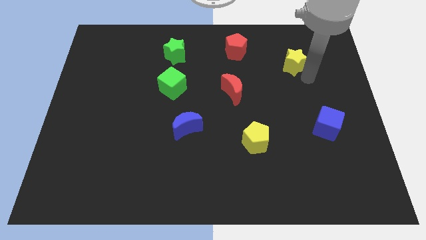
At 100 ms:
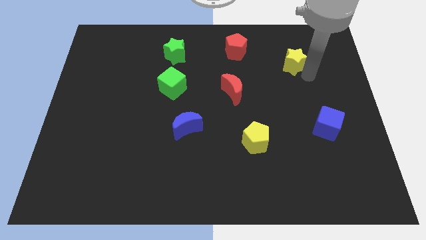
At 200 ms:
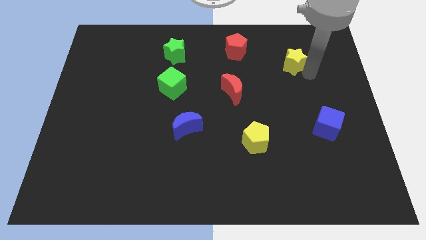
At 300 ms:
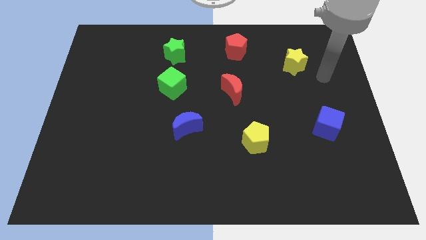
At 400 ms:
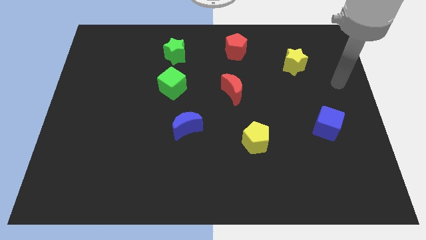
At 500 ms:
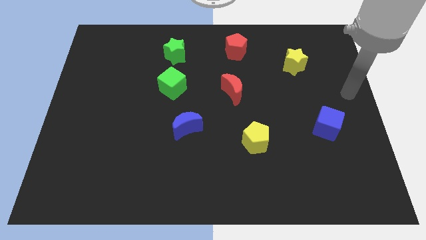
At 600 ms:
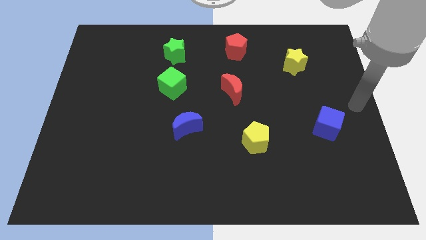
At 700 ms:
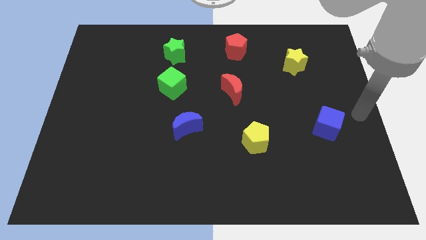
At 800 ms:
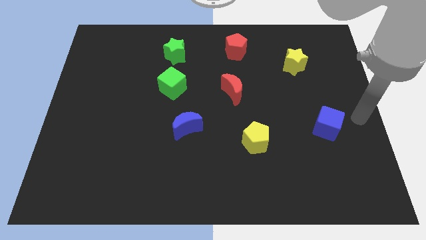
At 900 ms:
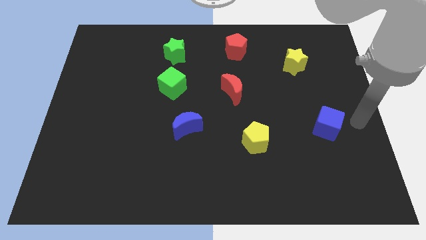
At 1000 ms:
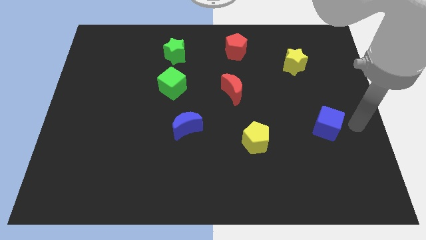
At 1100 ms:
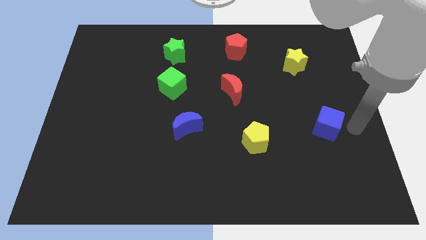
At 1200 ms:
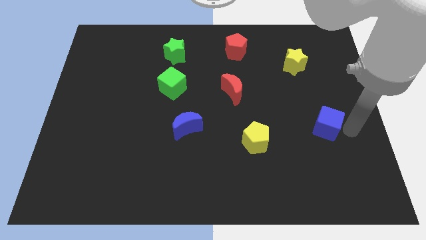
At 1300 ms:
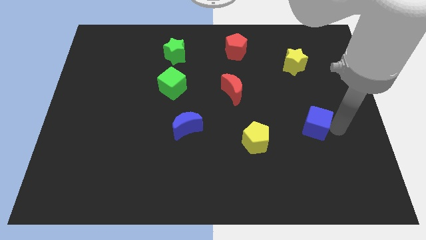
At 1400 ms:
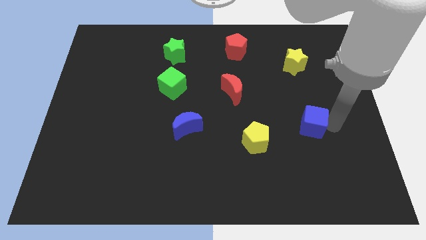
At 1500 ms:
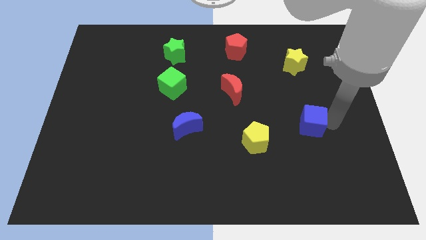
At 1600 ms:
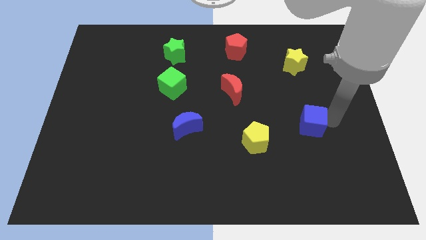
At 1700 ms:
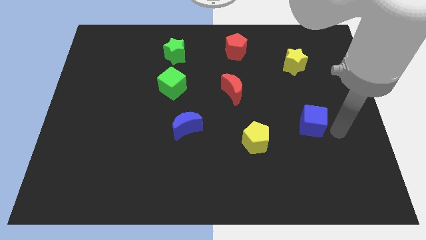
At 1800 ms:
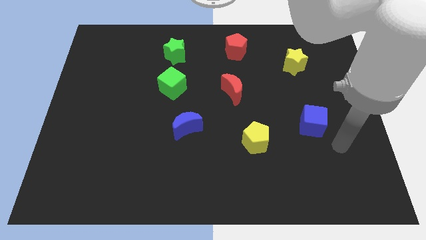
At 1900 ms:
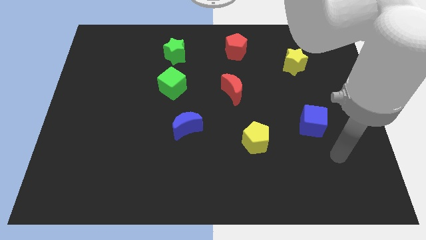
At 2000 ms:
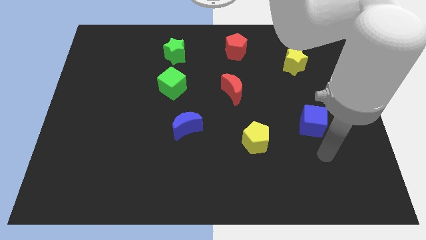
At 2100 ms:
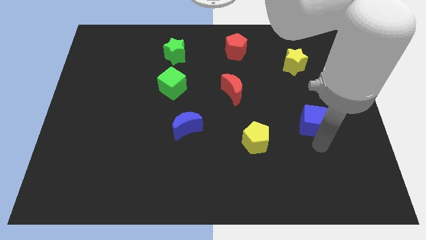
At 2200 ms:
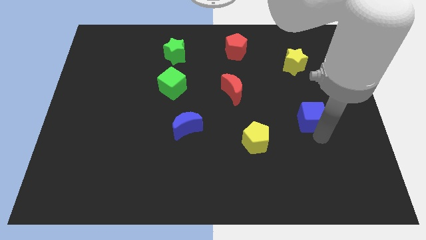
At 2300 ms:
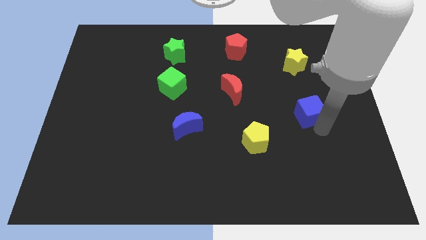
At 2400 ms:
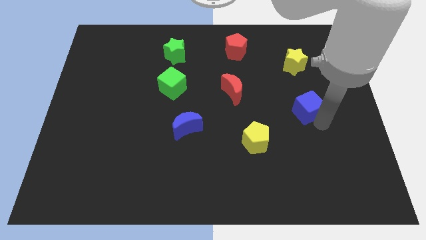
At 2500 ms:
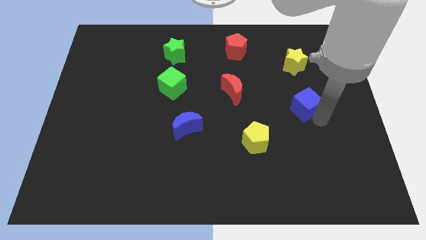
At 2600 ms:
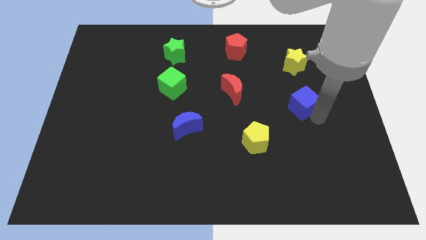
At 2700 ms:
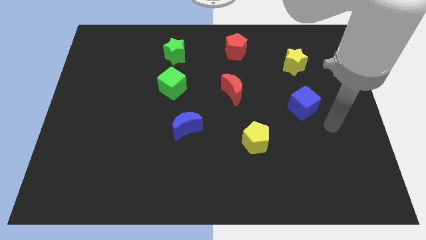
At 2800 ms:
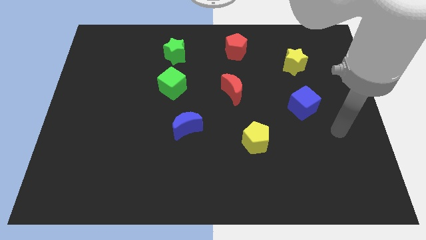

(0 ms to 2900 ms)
push the blue cube upward

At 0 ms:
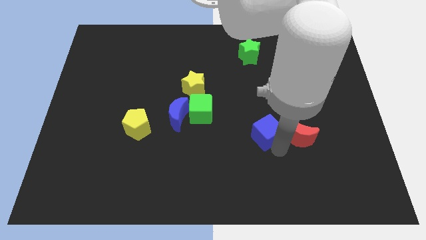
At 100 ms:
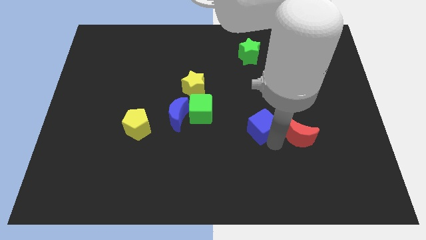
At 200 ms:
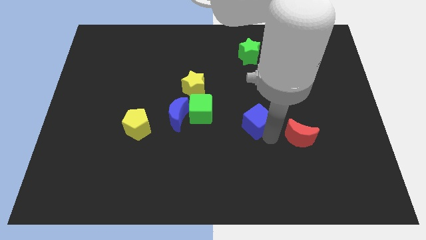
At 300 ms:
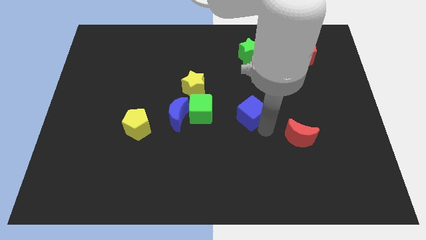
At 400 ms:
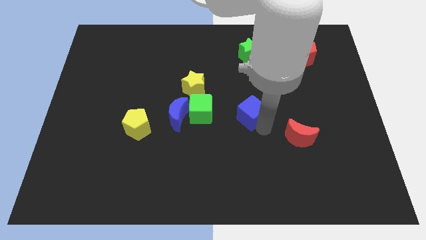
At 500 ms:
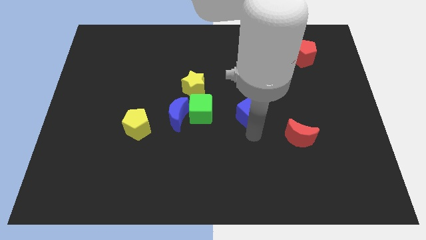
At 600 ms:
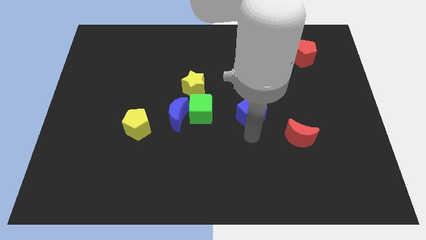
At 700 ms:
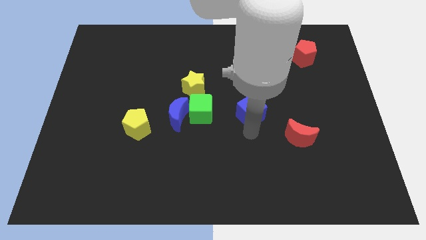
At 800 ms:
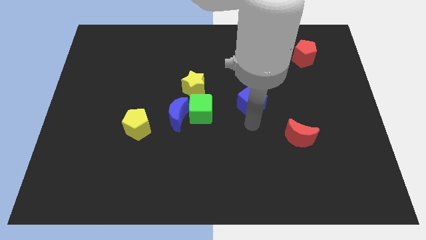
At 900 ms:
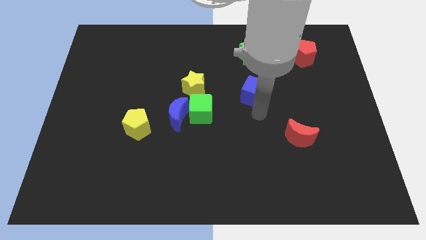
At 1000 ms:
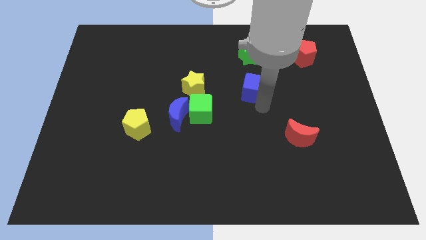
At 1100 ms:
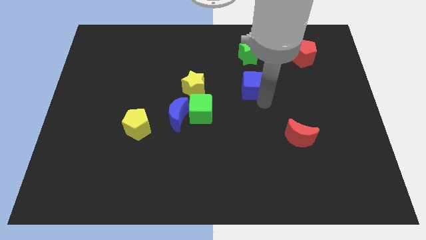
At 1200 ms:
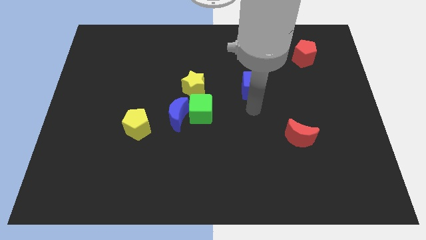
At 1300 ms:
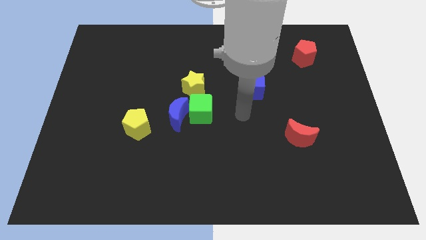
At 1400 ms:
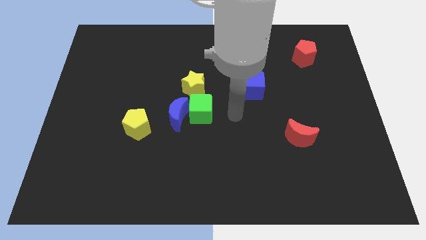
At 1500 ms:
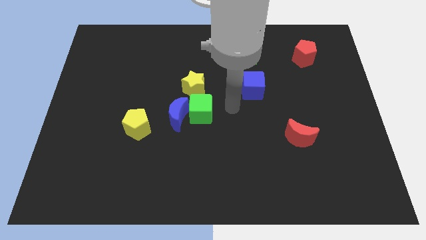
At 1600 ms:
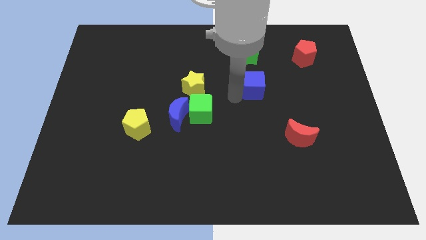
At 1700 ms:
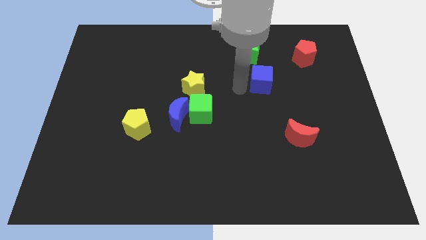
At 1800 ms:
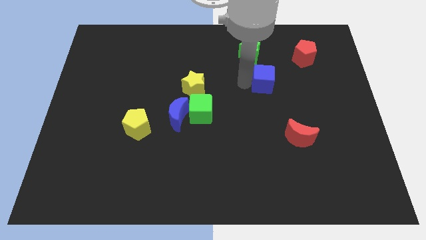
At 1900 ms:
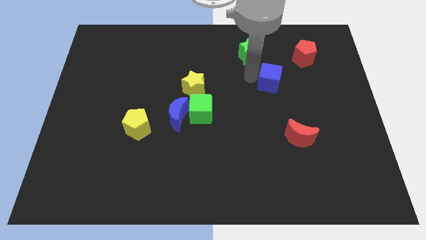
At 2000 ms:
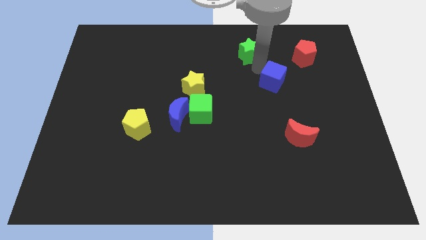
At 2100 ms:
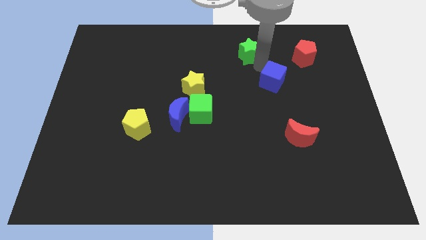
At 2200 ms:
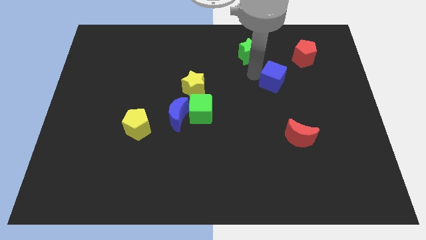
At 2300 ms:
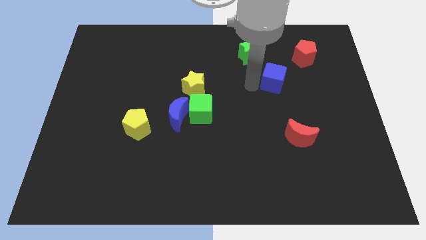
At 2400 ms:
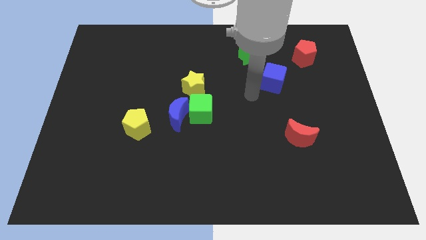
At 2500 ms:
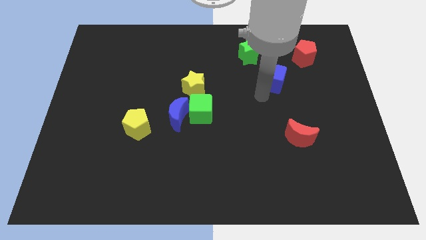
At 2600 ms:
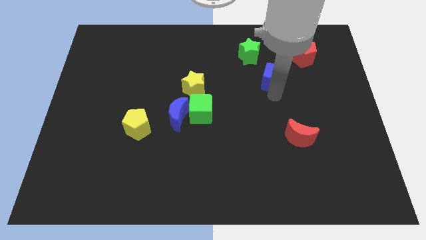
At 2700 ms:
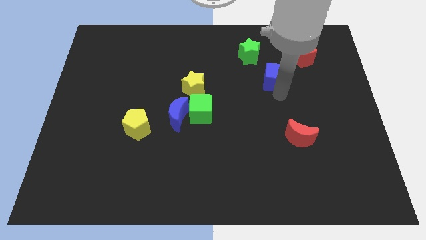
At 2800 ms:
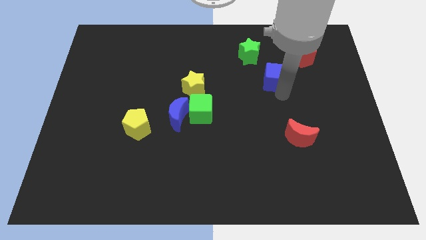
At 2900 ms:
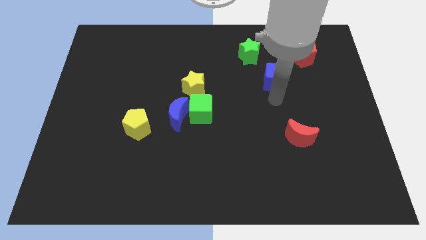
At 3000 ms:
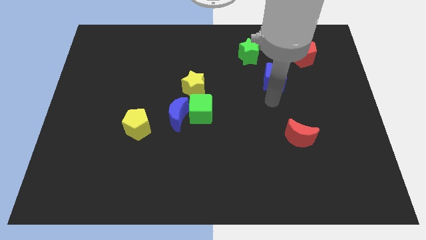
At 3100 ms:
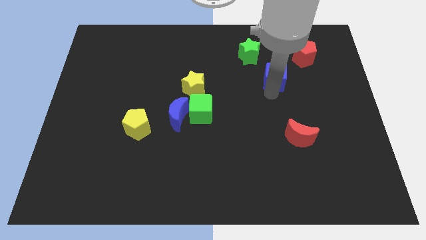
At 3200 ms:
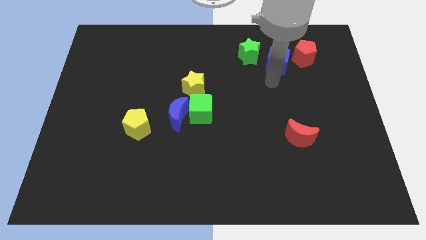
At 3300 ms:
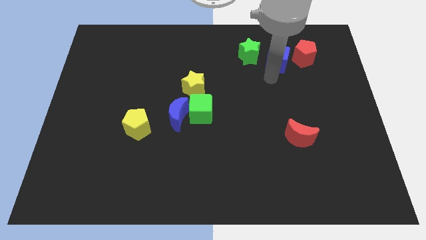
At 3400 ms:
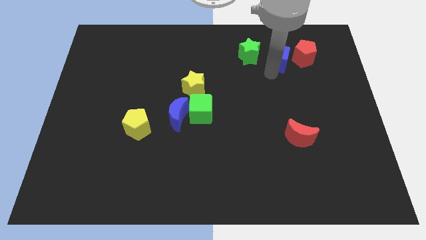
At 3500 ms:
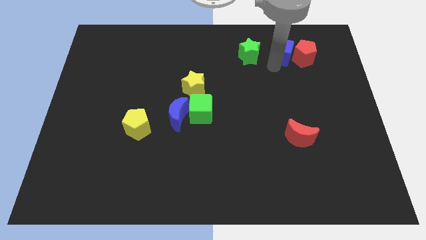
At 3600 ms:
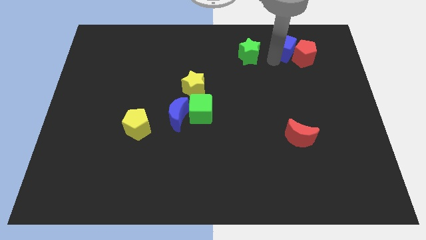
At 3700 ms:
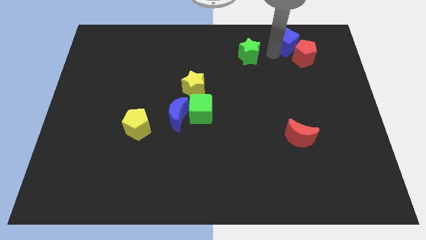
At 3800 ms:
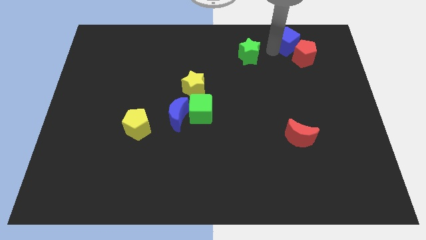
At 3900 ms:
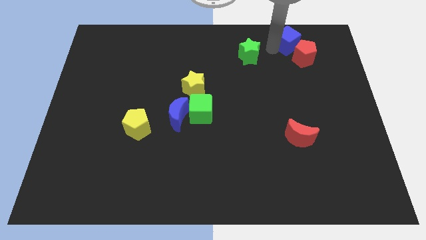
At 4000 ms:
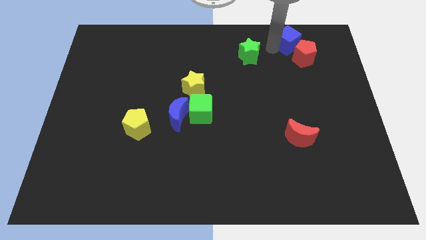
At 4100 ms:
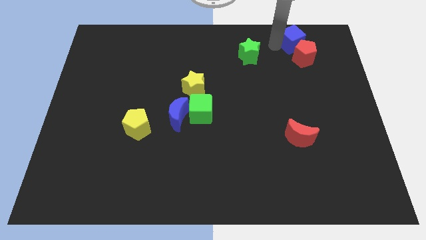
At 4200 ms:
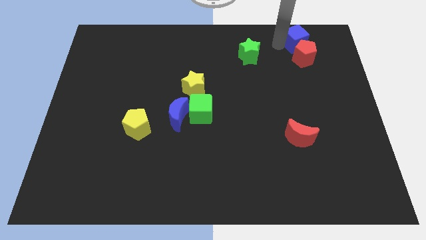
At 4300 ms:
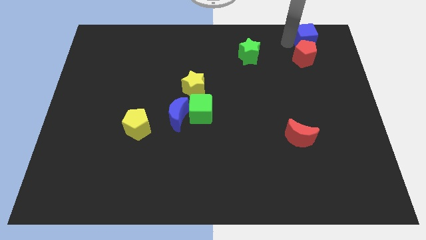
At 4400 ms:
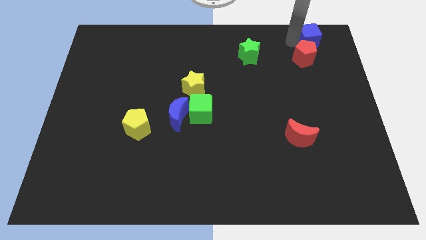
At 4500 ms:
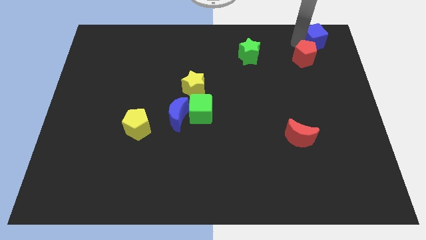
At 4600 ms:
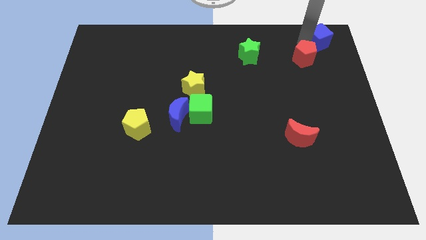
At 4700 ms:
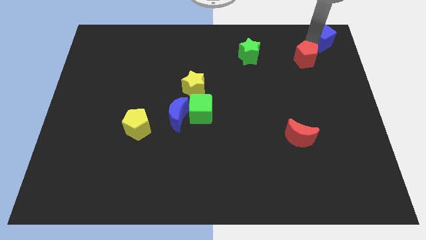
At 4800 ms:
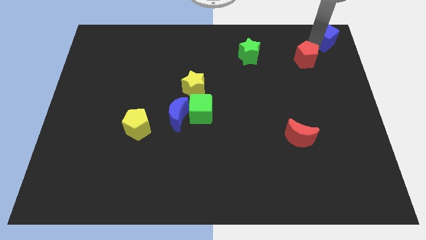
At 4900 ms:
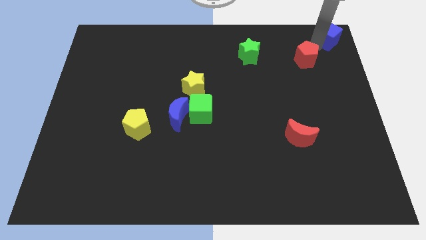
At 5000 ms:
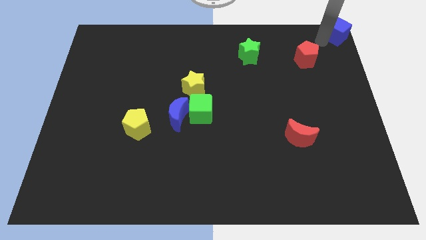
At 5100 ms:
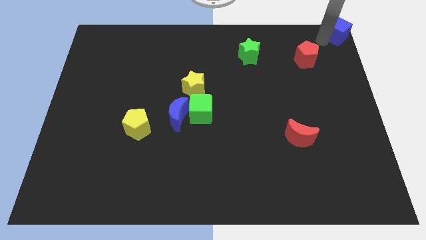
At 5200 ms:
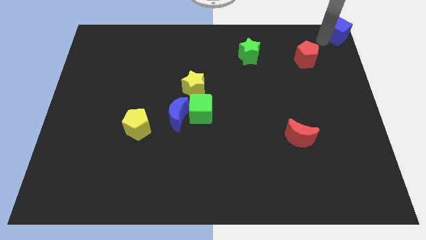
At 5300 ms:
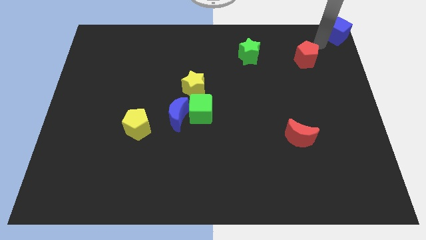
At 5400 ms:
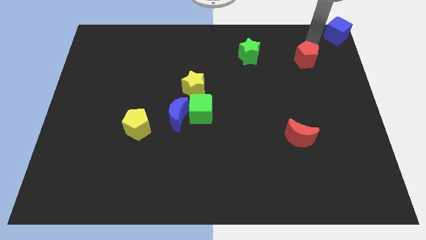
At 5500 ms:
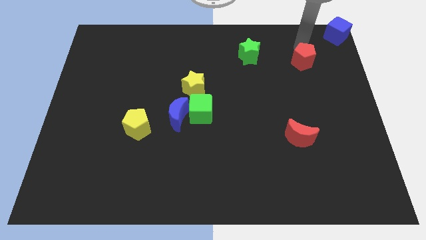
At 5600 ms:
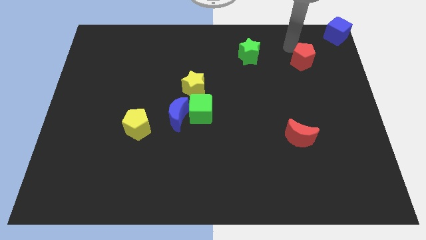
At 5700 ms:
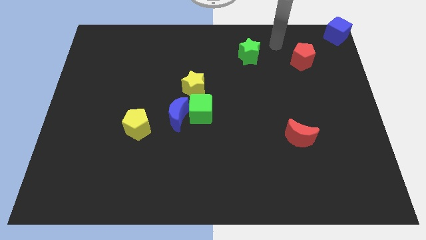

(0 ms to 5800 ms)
push the blue crescent to the top right corner

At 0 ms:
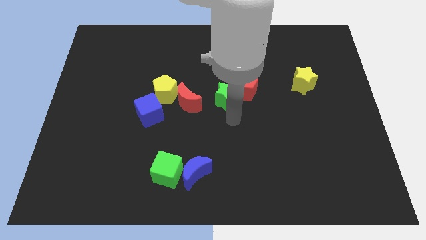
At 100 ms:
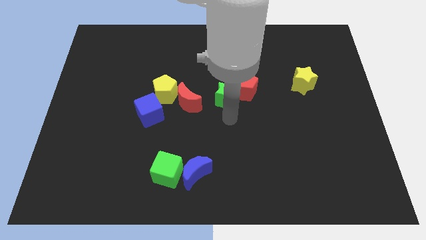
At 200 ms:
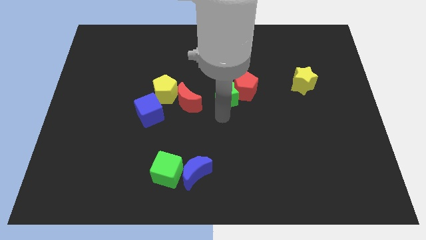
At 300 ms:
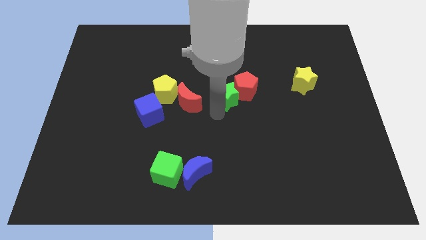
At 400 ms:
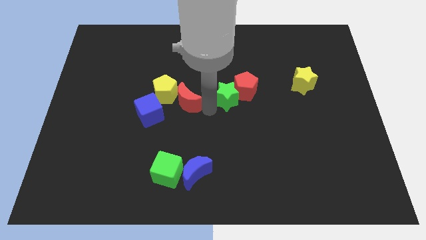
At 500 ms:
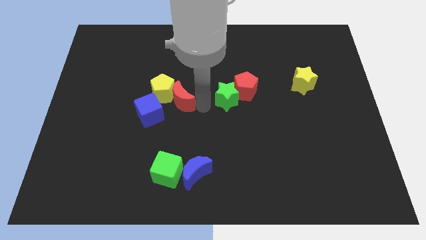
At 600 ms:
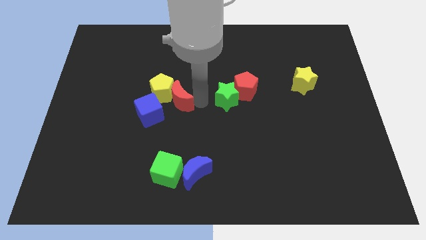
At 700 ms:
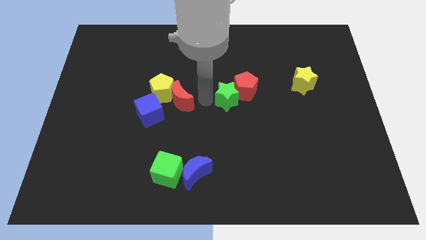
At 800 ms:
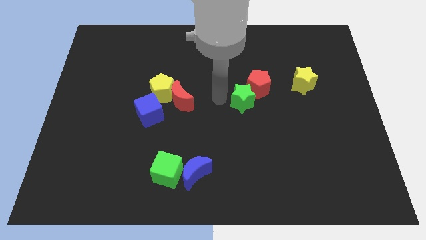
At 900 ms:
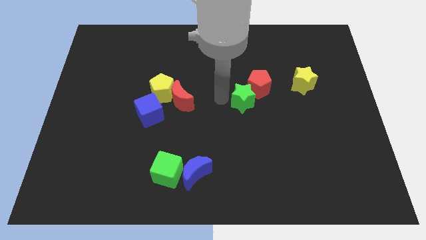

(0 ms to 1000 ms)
push the red moon into the yellow pentagon
